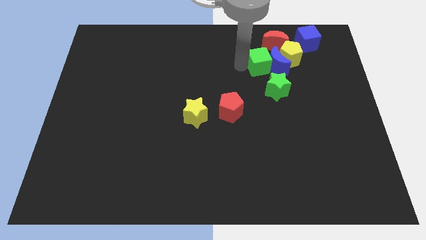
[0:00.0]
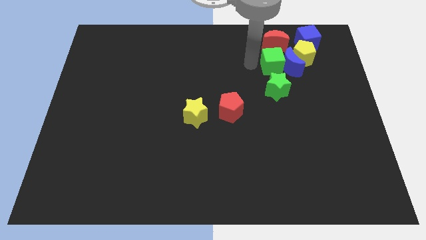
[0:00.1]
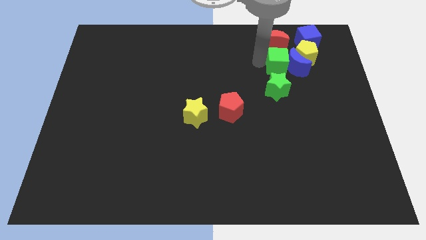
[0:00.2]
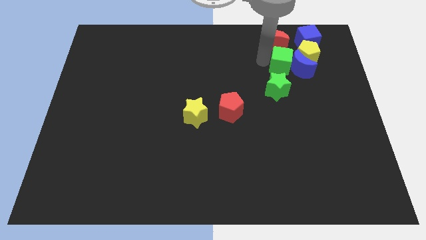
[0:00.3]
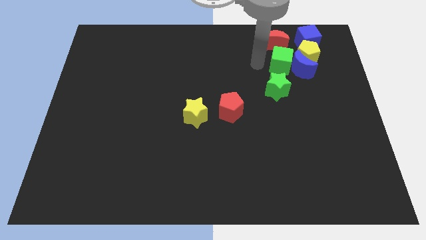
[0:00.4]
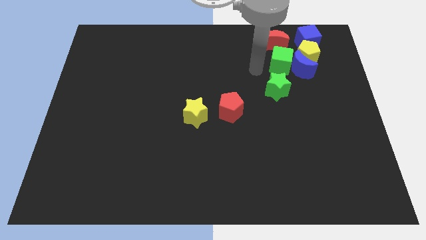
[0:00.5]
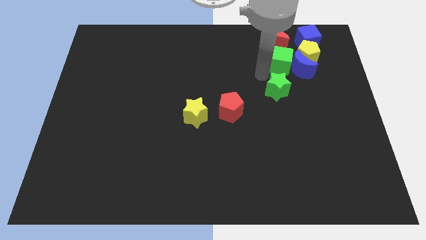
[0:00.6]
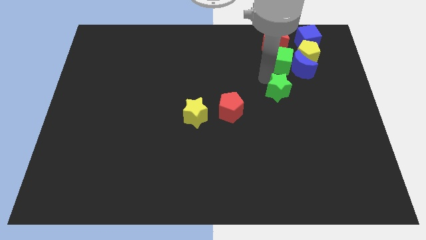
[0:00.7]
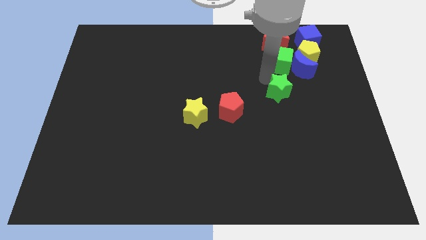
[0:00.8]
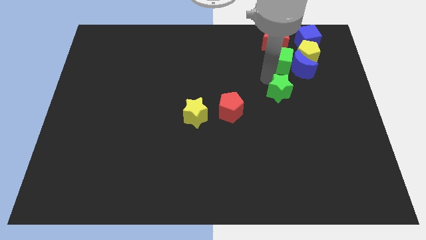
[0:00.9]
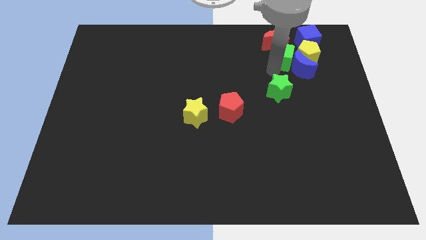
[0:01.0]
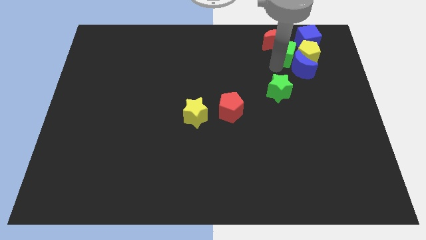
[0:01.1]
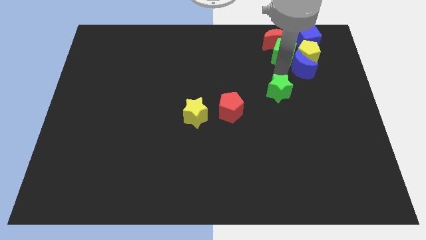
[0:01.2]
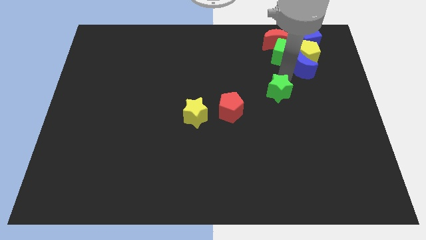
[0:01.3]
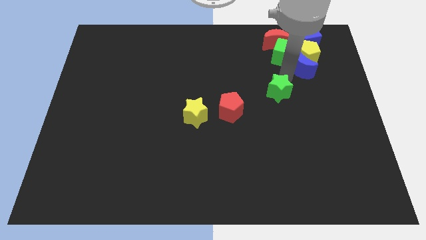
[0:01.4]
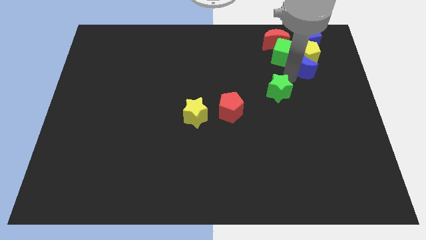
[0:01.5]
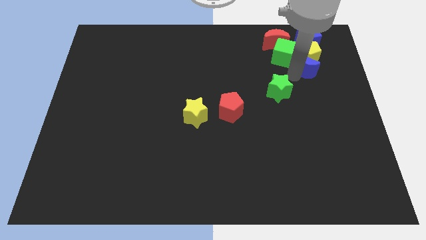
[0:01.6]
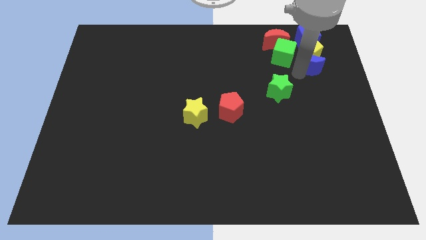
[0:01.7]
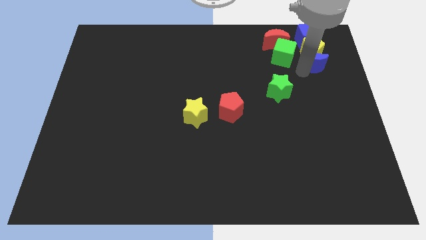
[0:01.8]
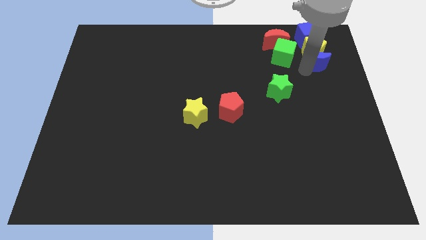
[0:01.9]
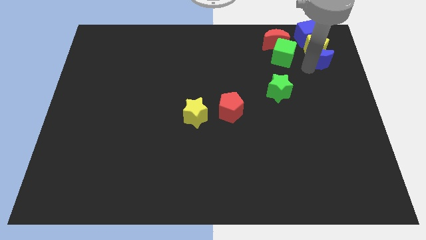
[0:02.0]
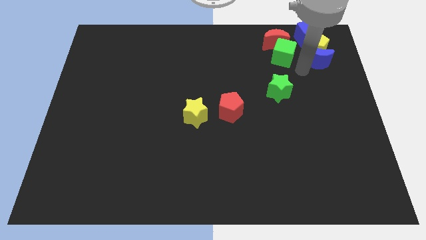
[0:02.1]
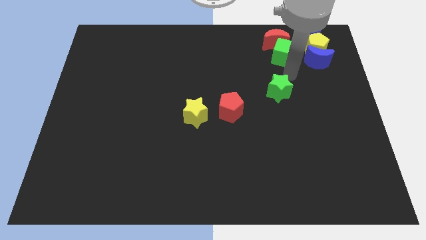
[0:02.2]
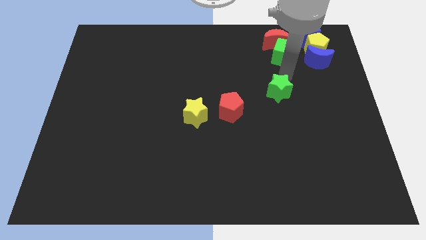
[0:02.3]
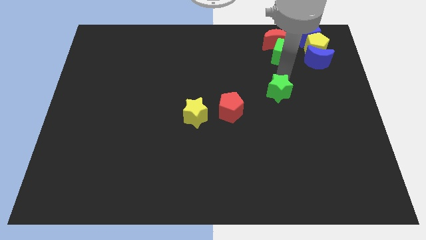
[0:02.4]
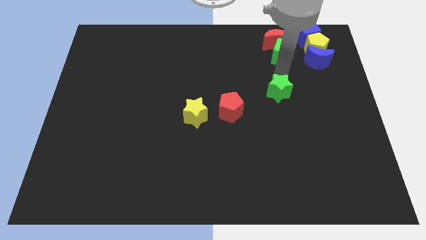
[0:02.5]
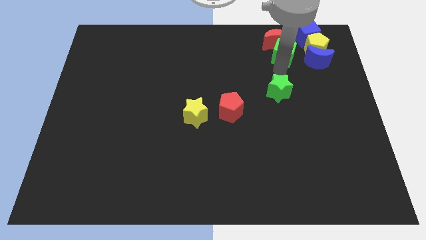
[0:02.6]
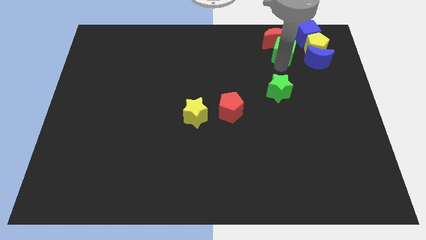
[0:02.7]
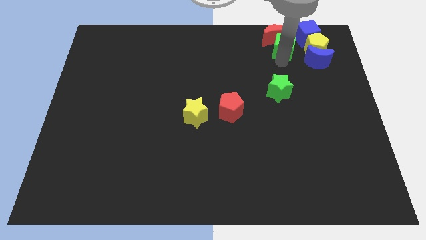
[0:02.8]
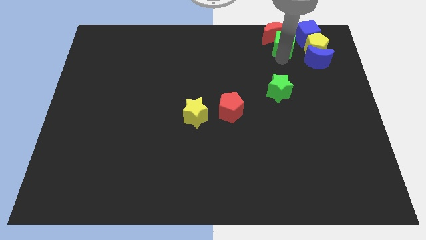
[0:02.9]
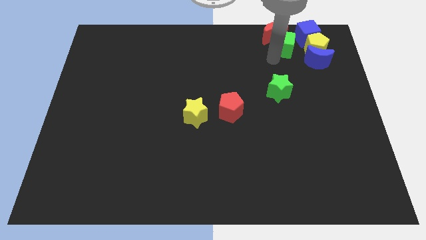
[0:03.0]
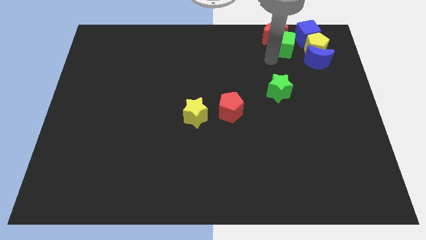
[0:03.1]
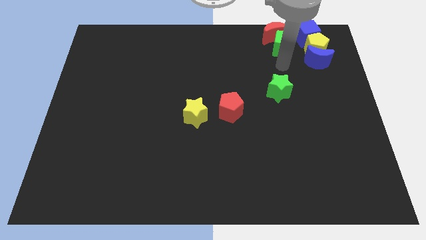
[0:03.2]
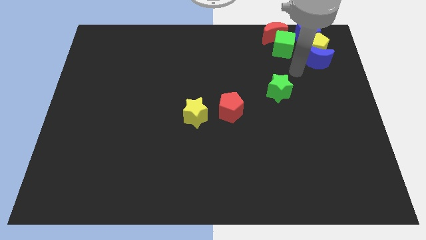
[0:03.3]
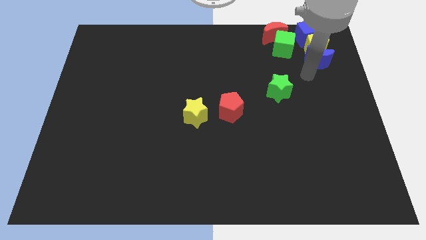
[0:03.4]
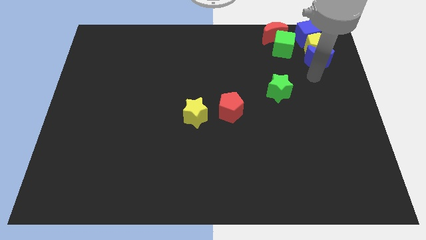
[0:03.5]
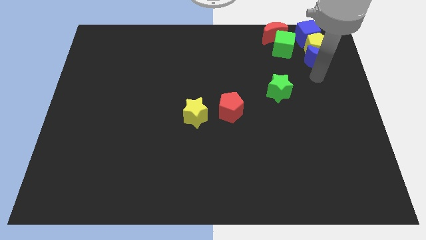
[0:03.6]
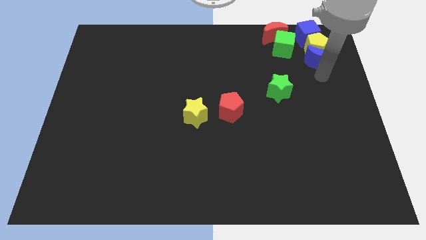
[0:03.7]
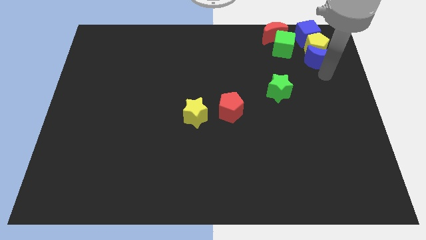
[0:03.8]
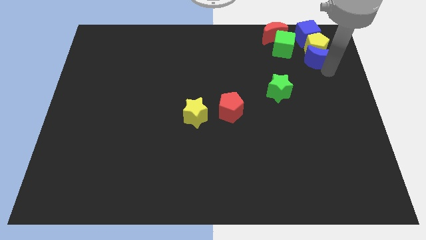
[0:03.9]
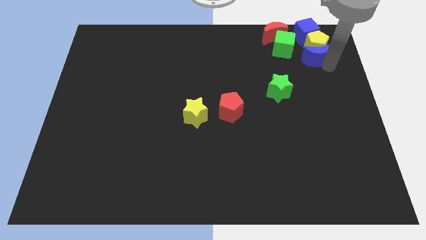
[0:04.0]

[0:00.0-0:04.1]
push a group of blocks to the right side of the board

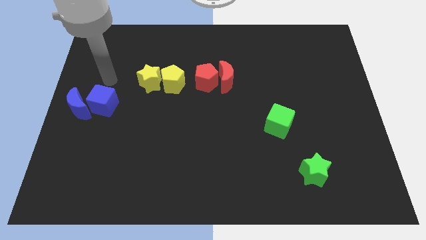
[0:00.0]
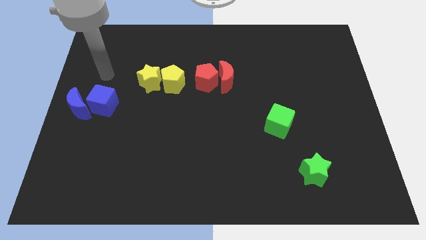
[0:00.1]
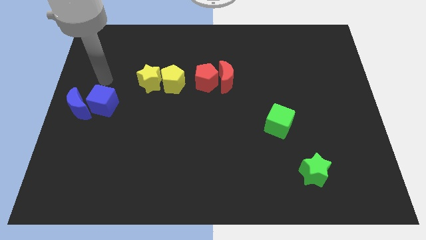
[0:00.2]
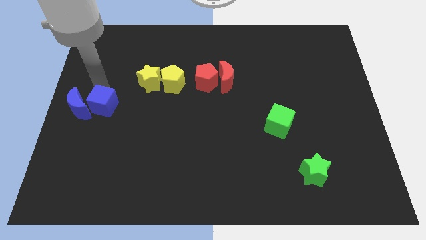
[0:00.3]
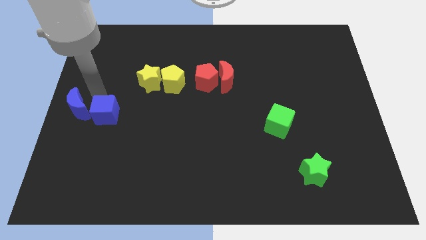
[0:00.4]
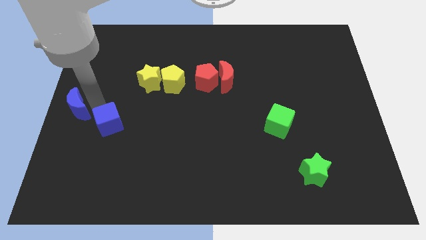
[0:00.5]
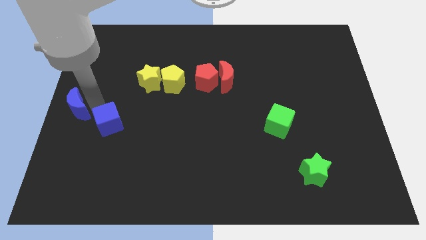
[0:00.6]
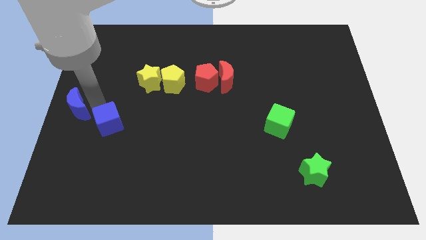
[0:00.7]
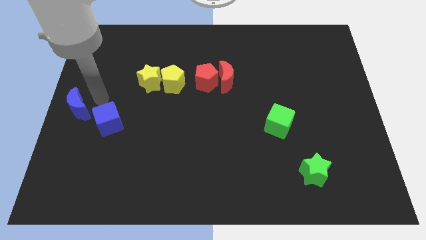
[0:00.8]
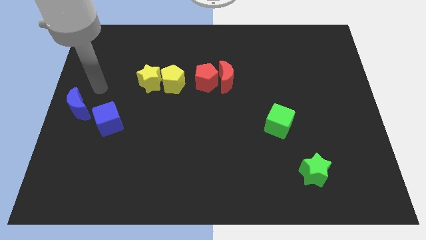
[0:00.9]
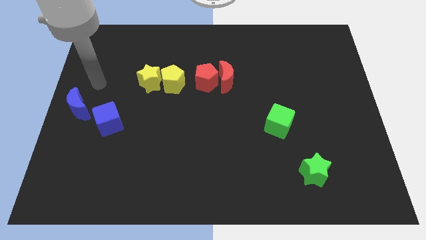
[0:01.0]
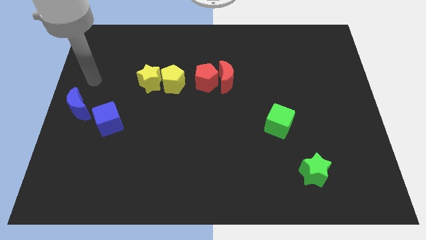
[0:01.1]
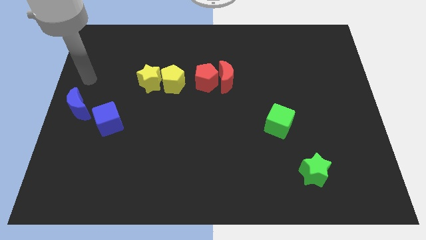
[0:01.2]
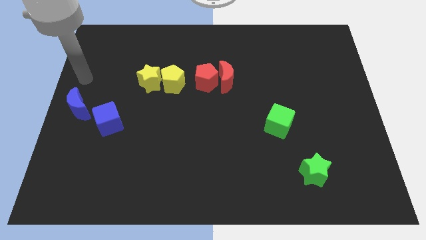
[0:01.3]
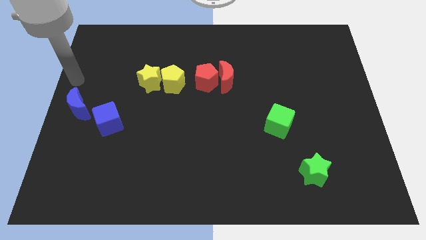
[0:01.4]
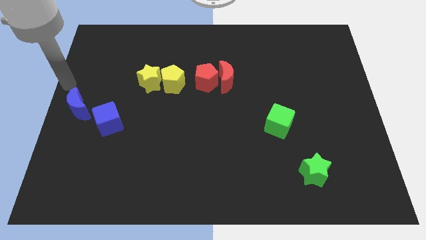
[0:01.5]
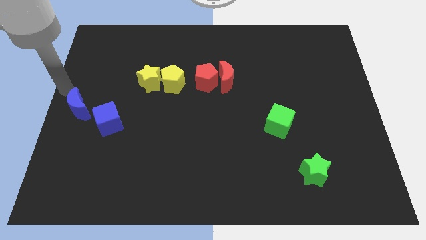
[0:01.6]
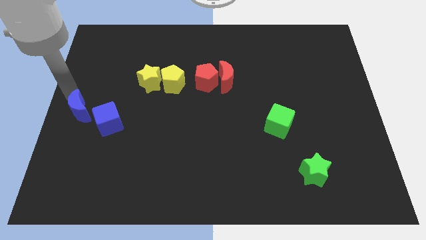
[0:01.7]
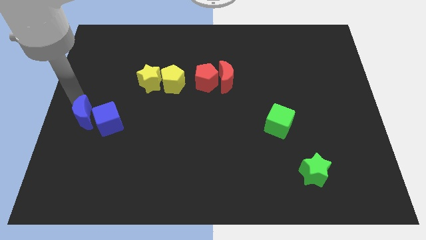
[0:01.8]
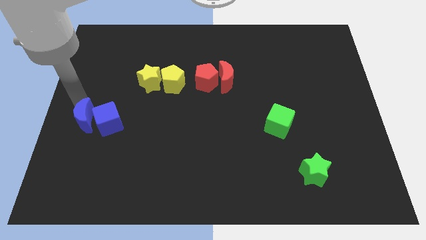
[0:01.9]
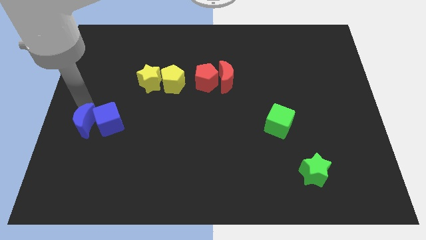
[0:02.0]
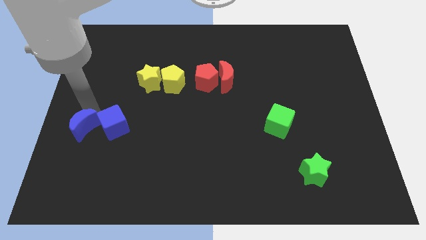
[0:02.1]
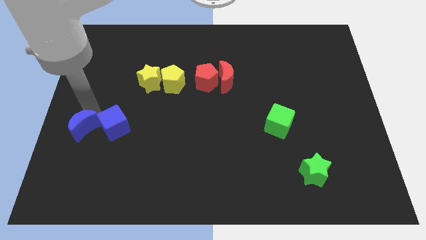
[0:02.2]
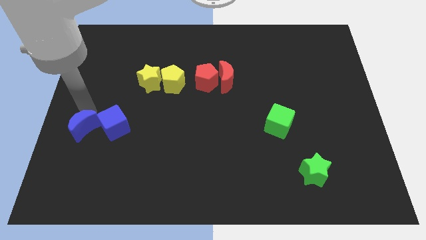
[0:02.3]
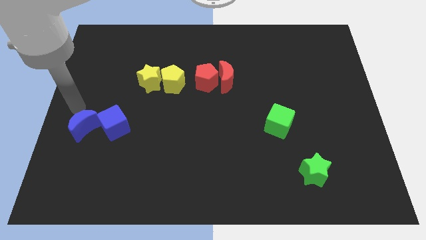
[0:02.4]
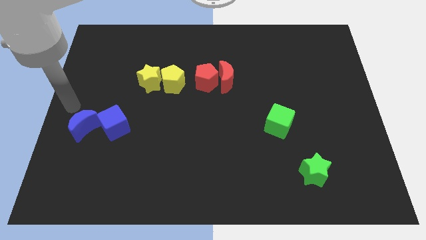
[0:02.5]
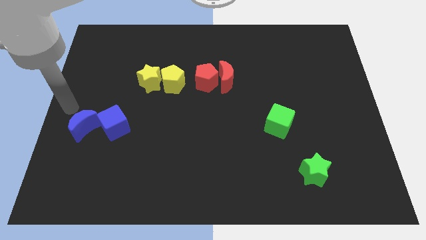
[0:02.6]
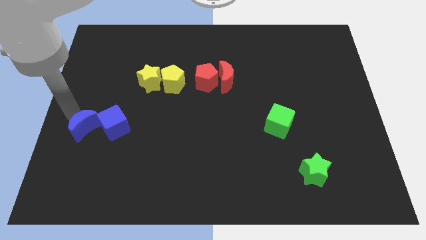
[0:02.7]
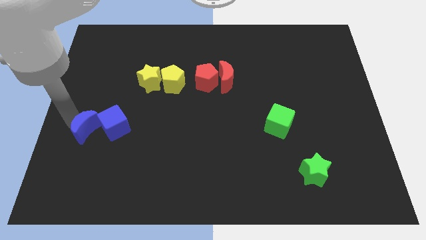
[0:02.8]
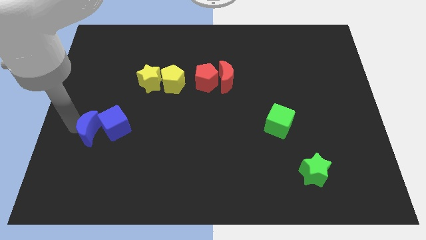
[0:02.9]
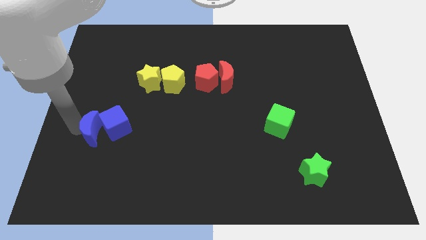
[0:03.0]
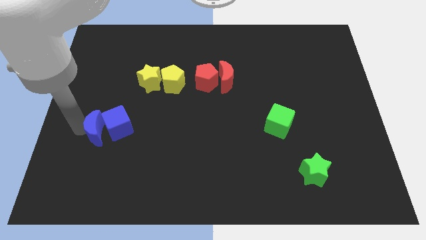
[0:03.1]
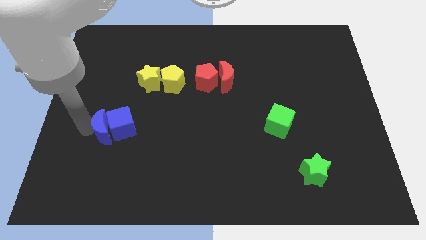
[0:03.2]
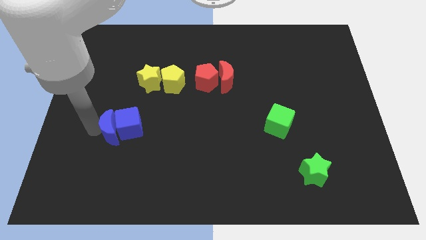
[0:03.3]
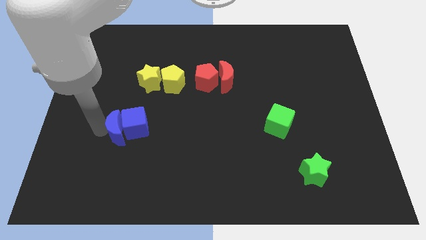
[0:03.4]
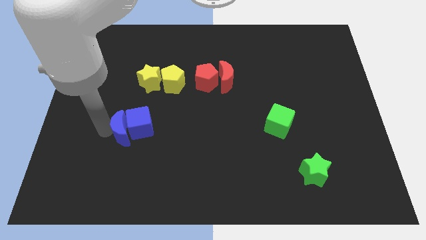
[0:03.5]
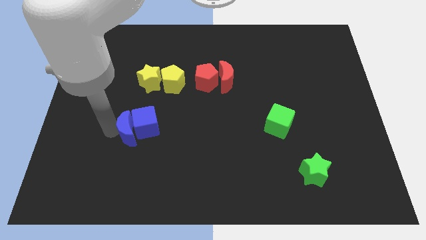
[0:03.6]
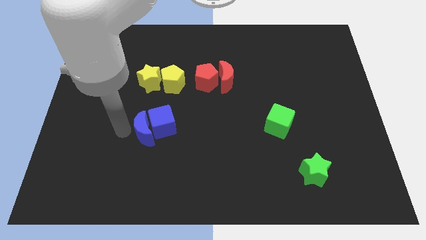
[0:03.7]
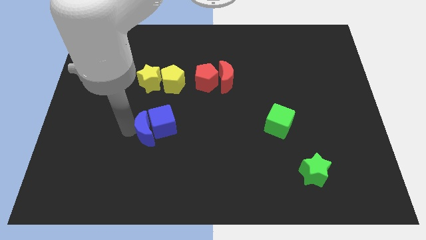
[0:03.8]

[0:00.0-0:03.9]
move the blue crescentblue cube towards the center of the board

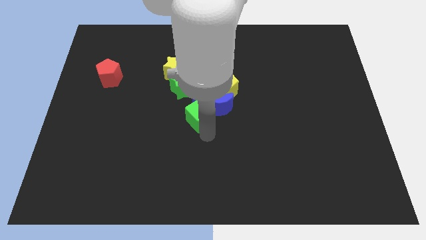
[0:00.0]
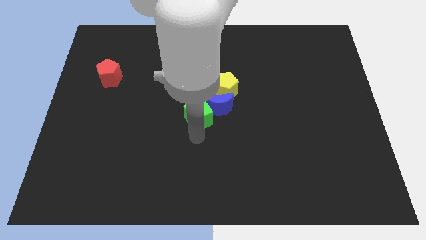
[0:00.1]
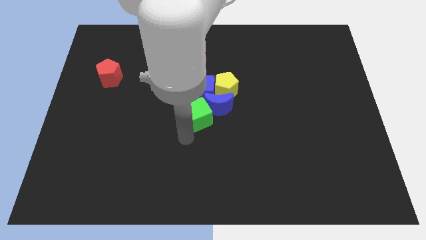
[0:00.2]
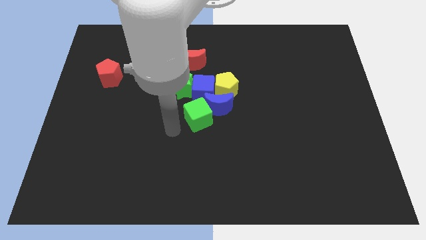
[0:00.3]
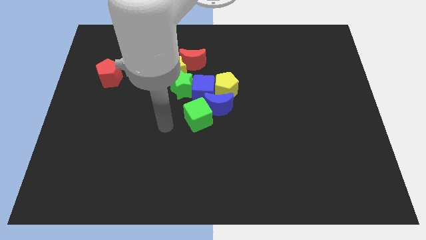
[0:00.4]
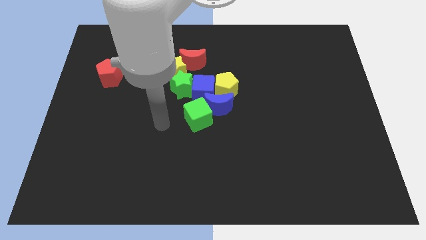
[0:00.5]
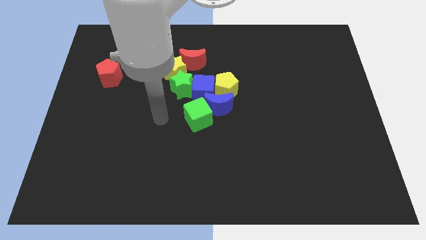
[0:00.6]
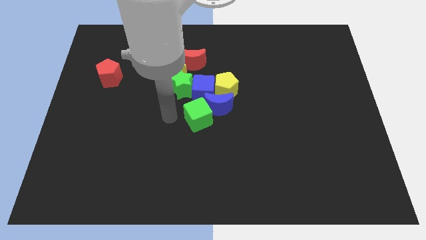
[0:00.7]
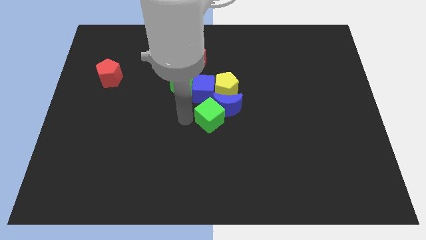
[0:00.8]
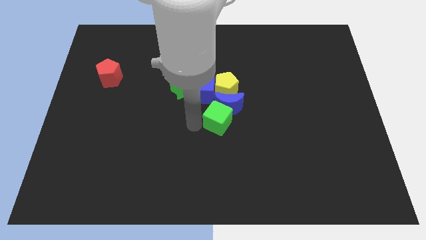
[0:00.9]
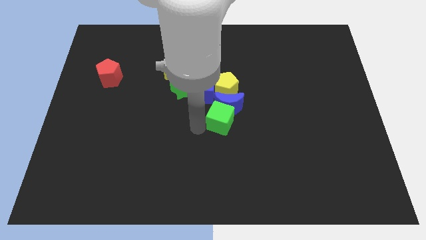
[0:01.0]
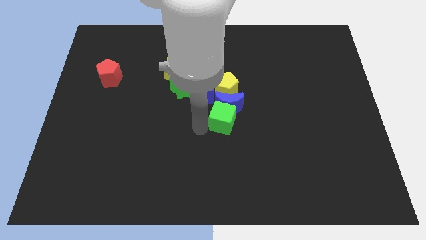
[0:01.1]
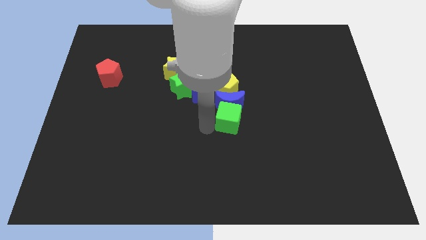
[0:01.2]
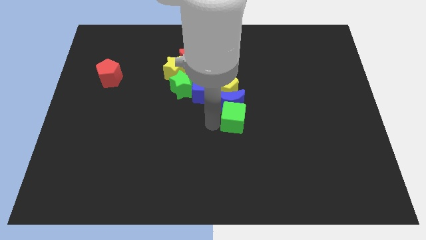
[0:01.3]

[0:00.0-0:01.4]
move the green cube diagonal to the blue cube
